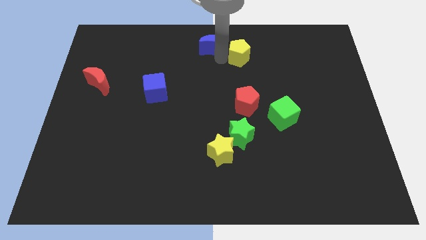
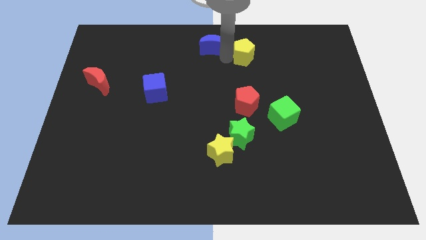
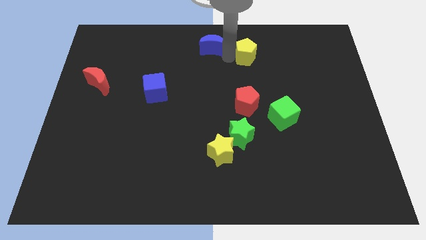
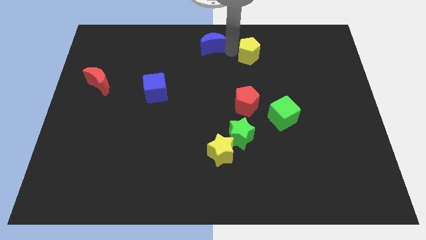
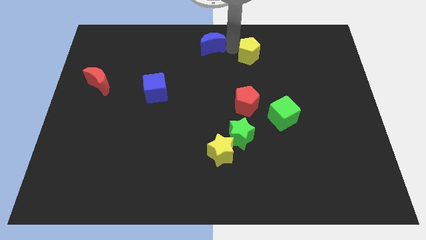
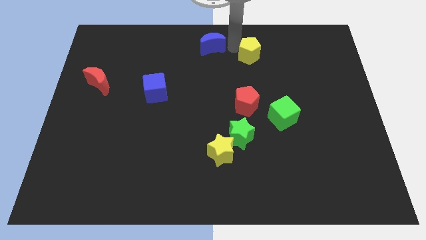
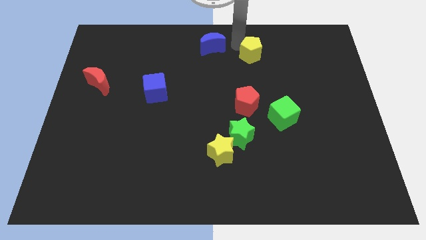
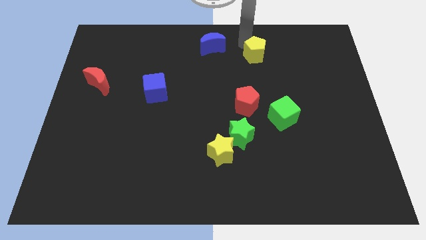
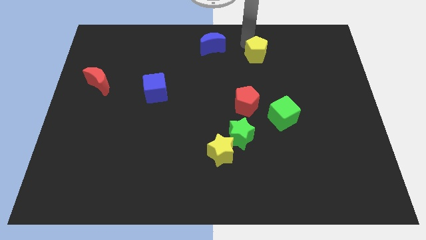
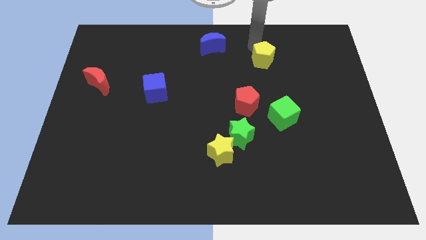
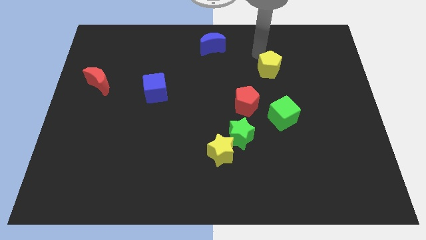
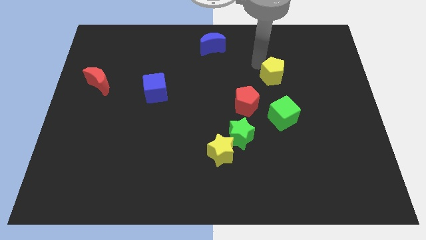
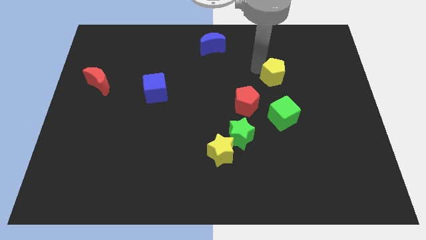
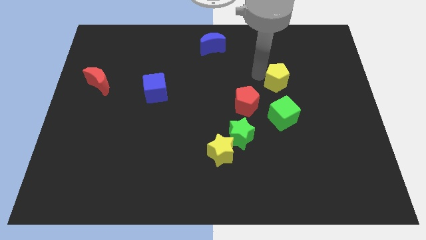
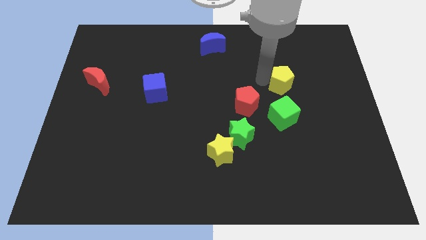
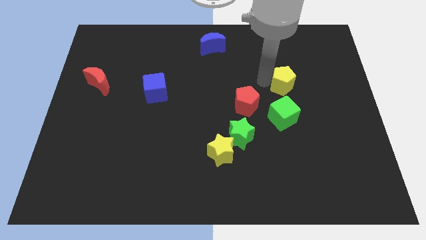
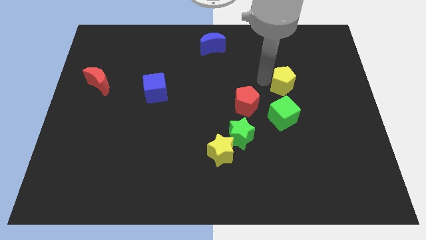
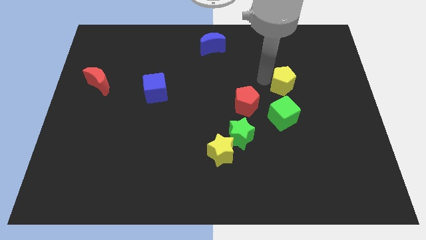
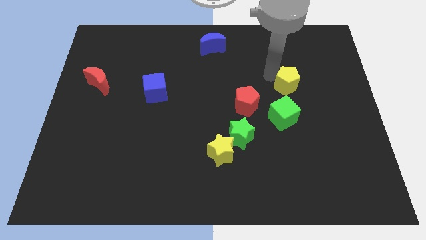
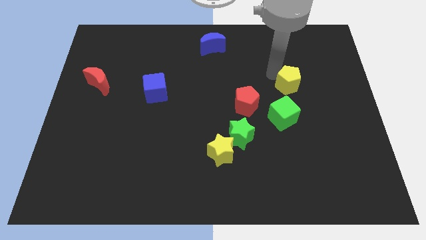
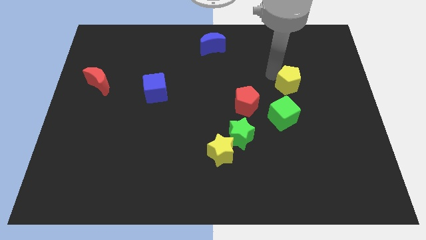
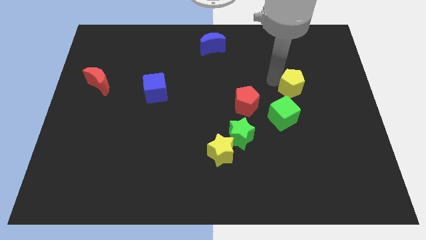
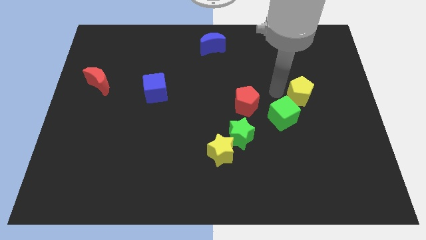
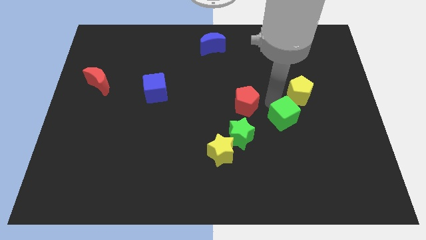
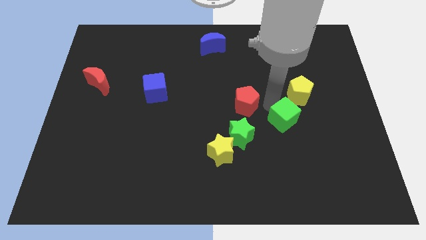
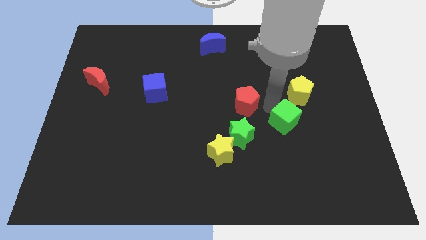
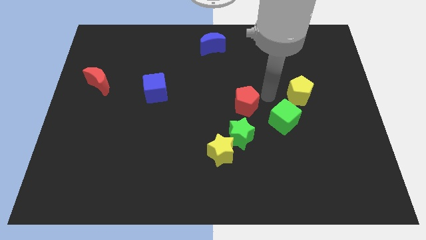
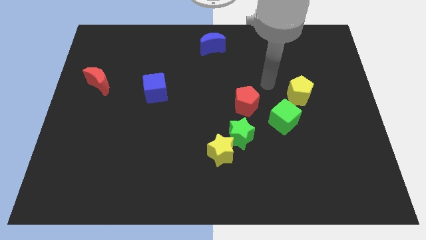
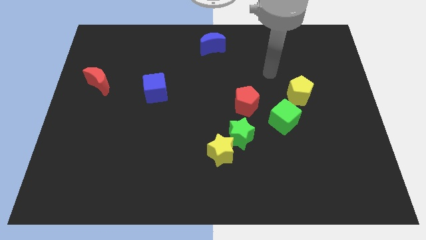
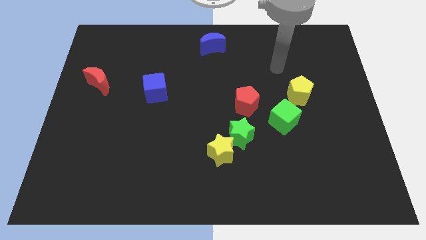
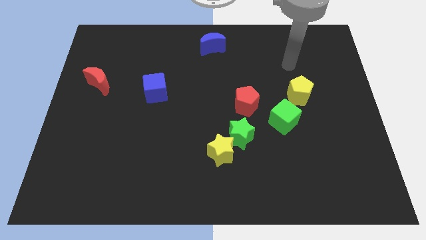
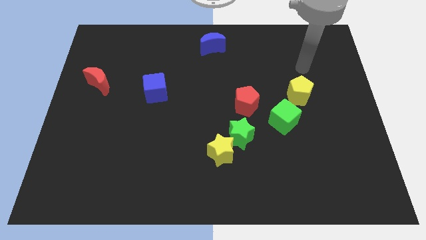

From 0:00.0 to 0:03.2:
place the yellow pentagon diagonally top right to the green cube

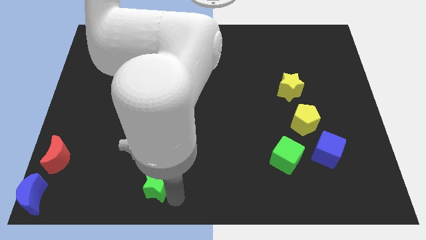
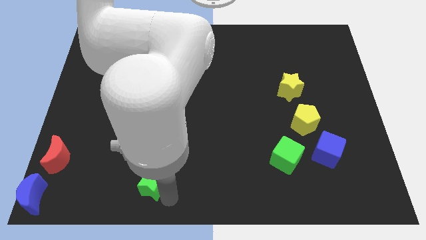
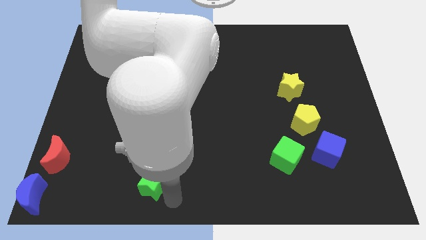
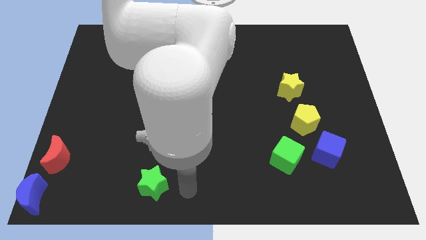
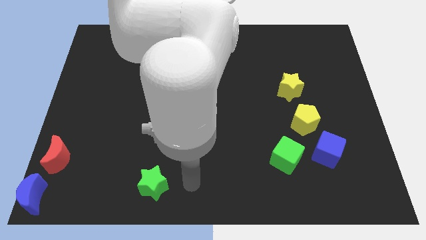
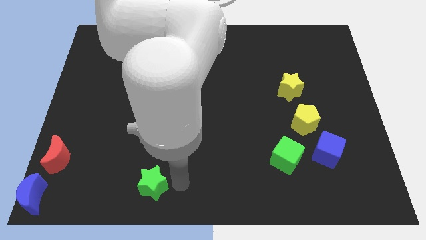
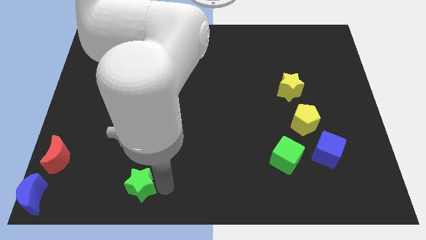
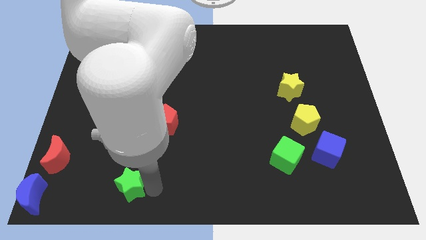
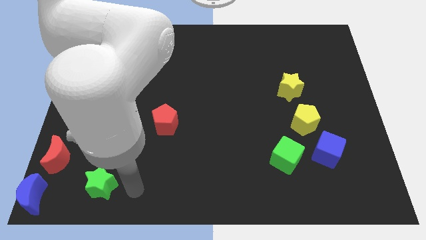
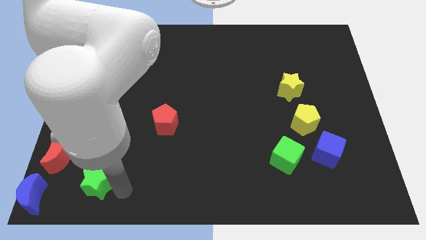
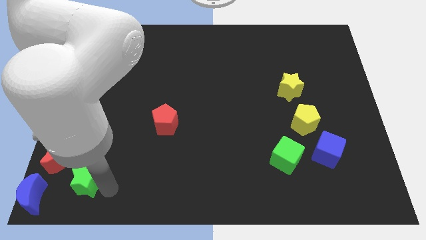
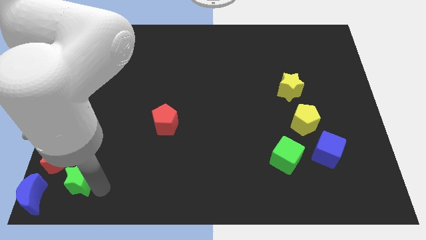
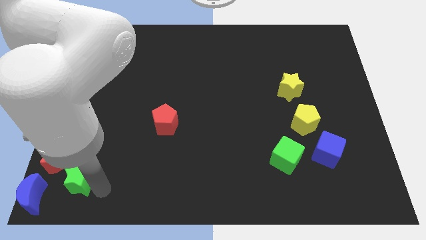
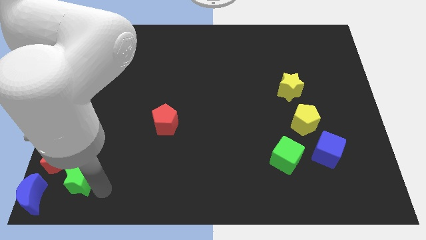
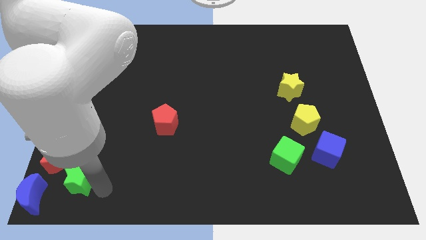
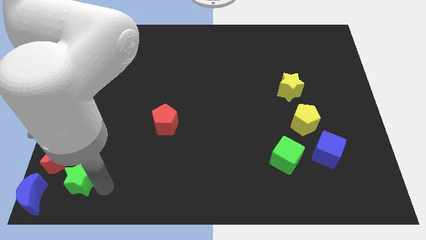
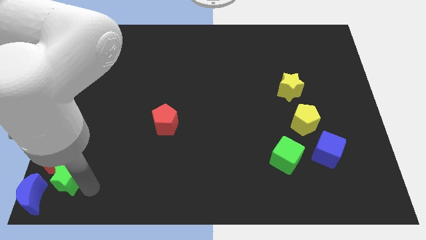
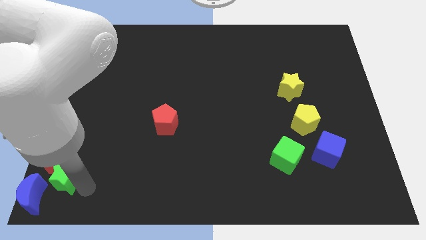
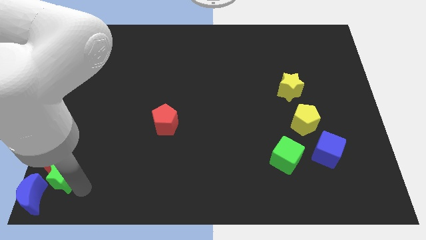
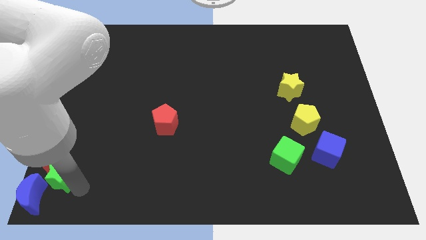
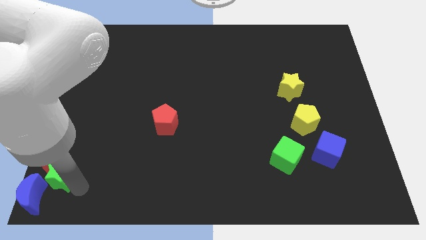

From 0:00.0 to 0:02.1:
push green star into blue moon

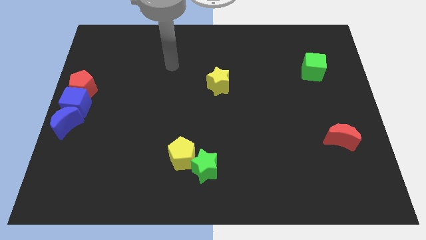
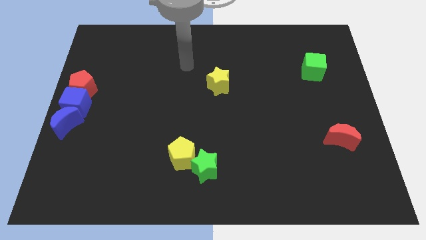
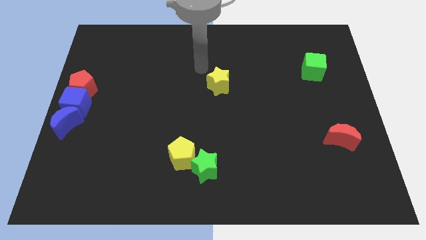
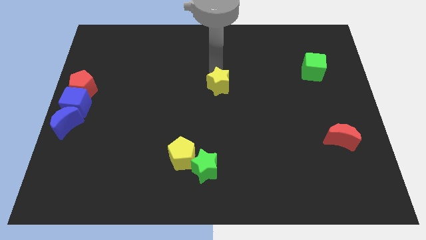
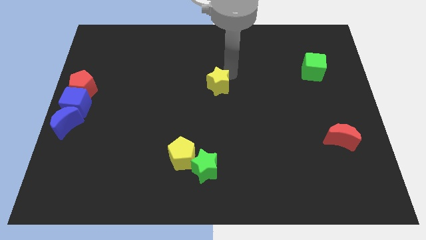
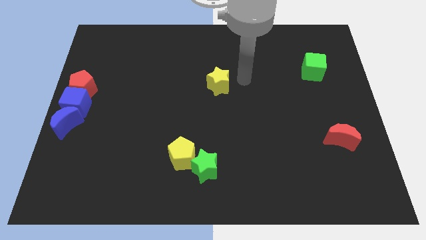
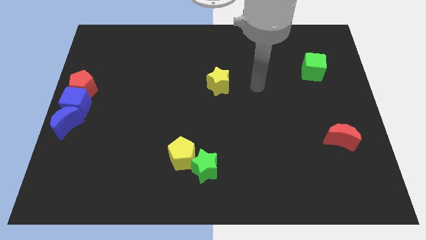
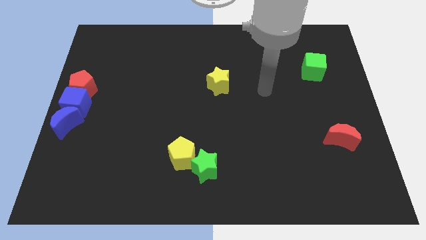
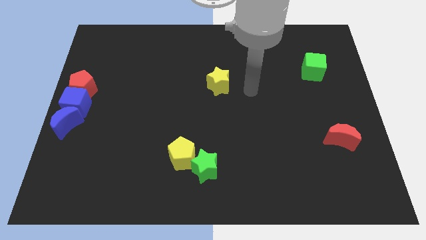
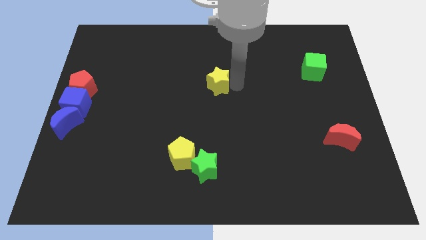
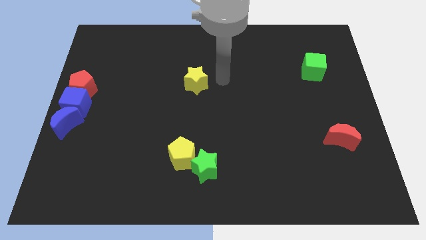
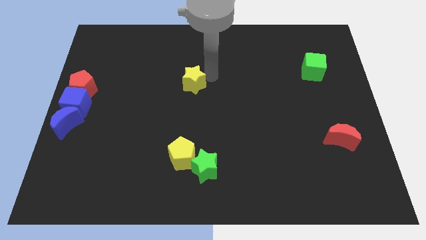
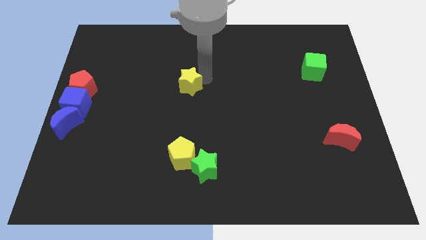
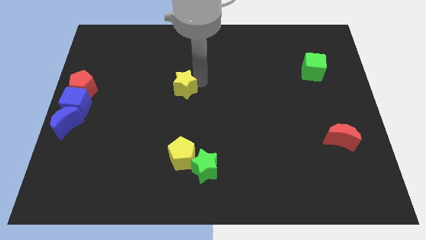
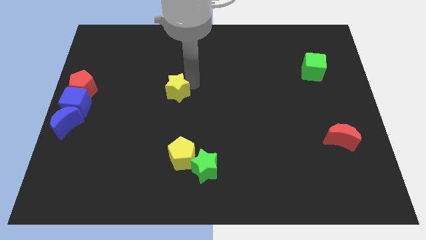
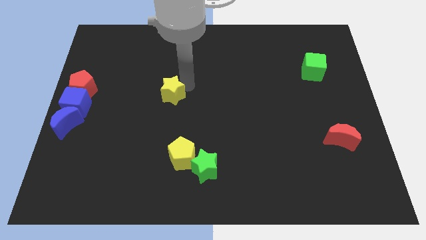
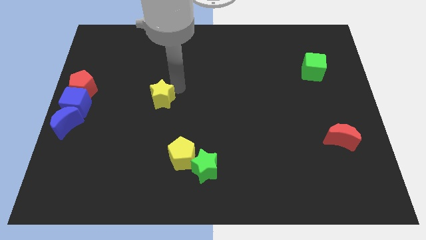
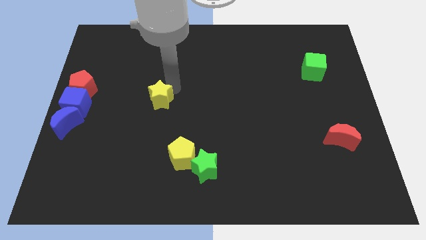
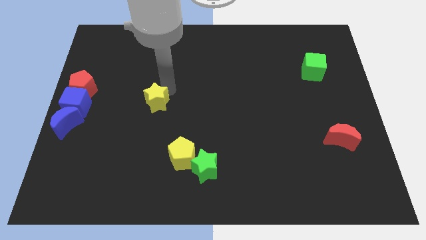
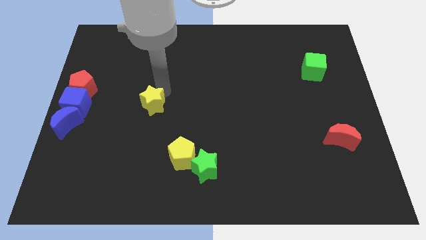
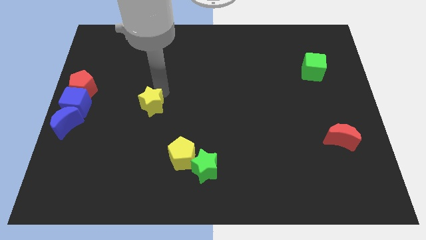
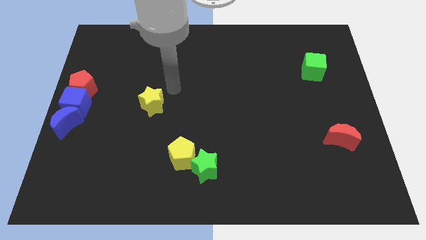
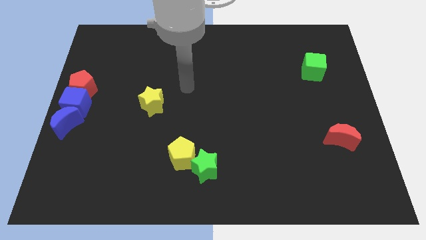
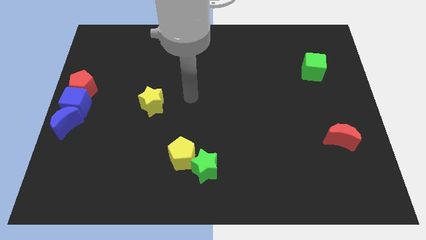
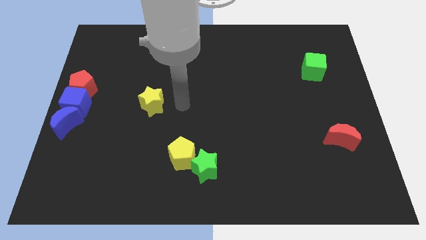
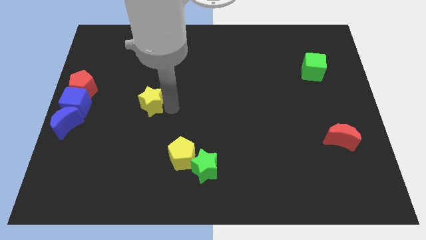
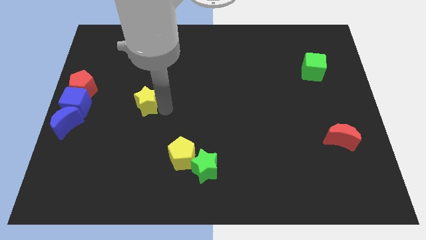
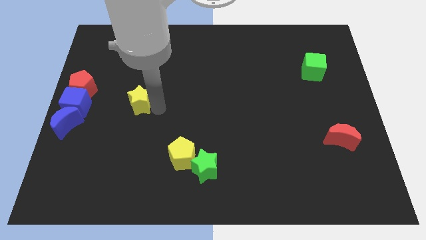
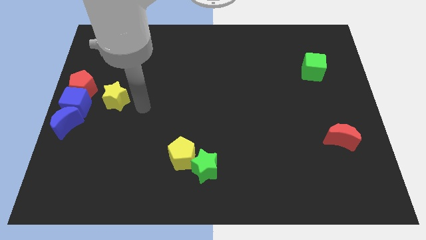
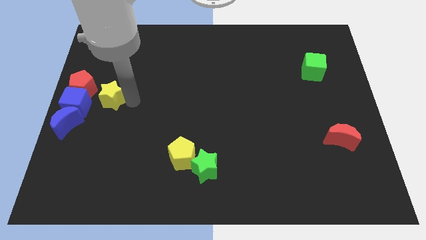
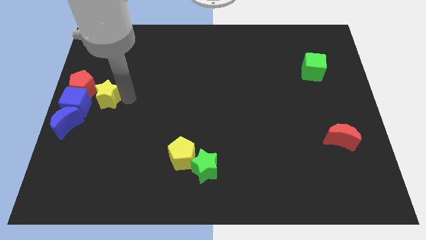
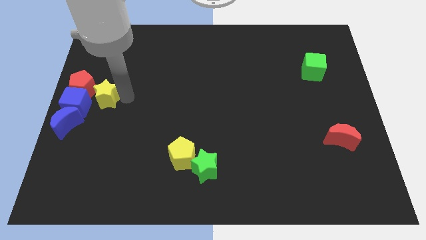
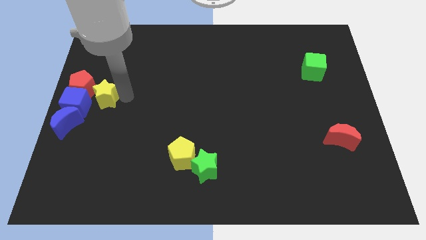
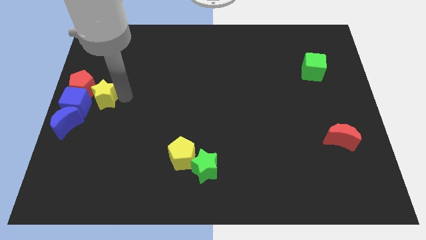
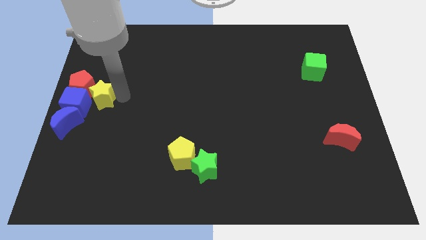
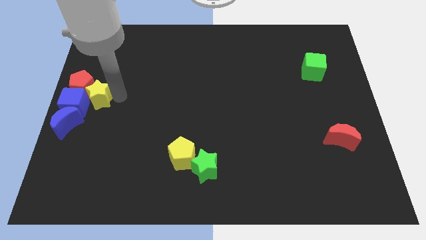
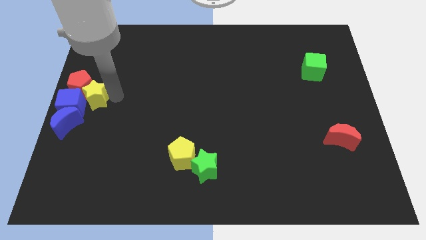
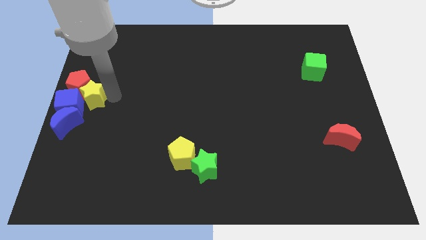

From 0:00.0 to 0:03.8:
push the yellow star into the red pentagon
